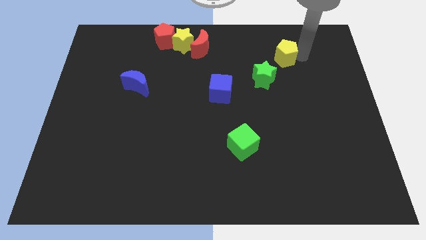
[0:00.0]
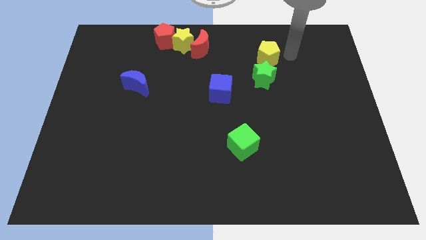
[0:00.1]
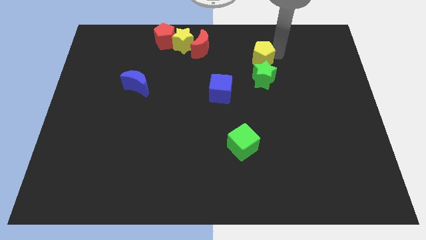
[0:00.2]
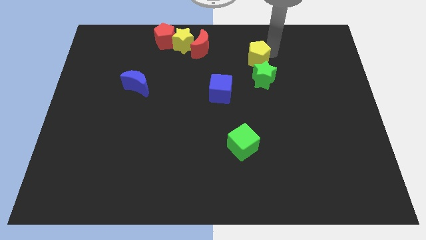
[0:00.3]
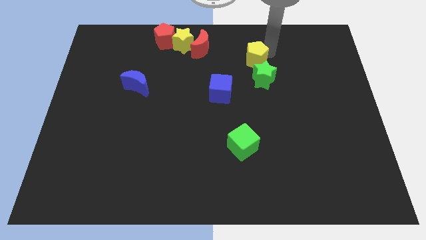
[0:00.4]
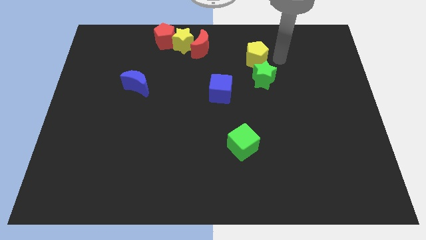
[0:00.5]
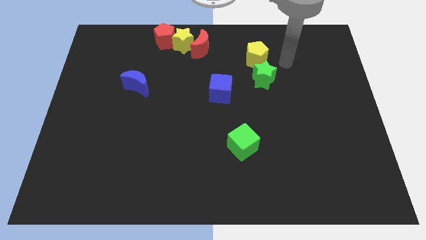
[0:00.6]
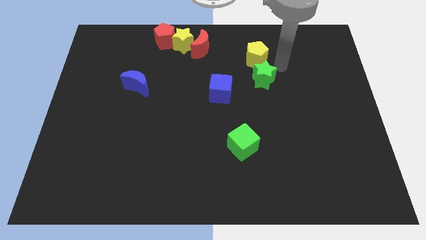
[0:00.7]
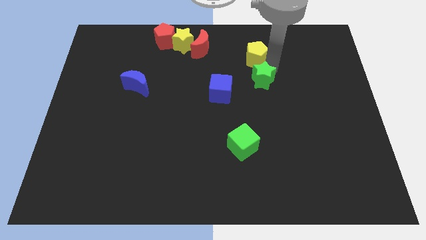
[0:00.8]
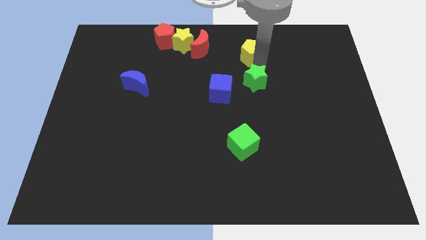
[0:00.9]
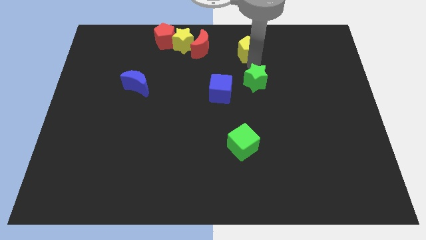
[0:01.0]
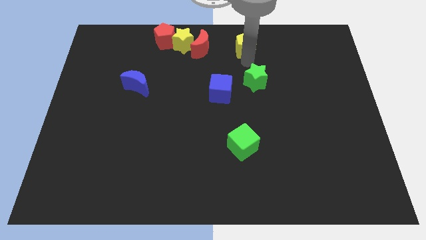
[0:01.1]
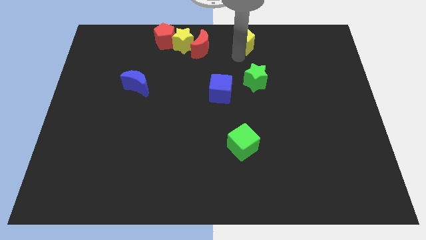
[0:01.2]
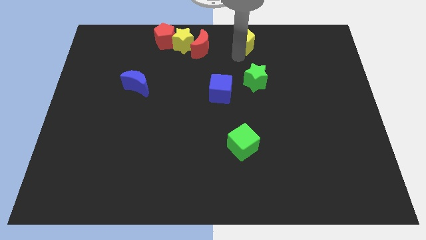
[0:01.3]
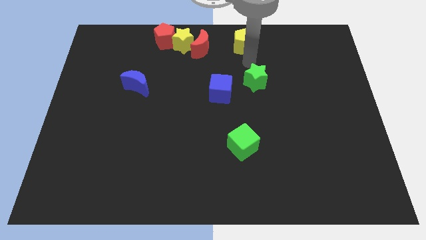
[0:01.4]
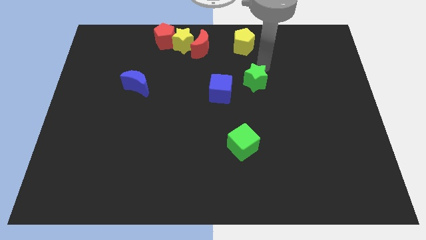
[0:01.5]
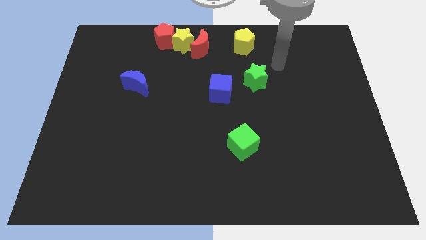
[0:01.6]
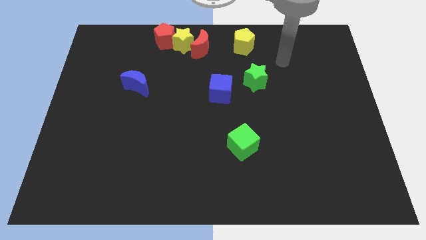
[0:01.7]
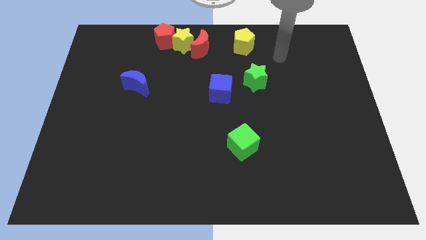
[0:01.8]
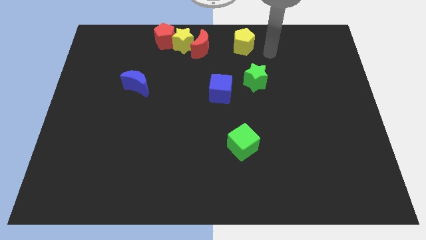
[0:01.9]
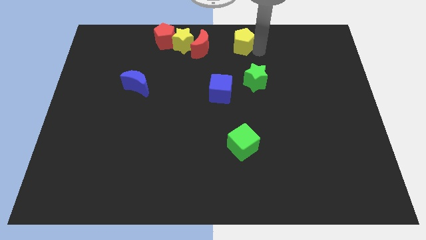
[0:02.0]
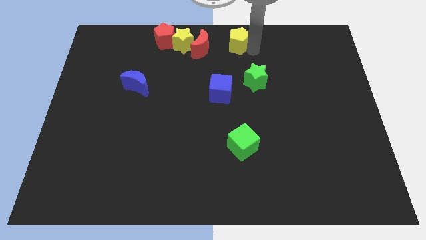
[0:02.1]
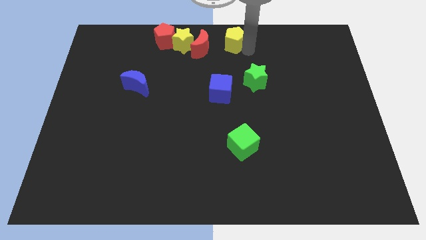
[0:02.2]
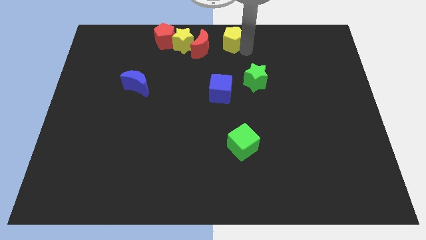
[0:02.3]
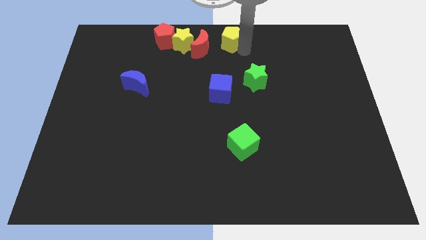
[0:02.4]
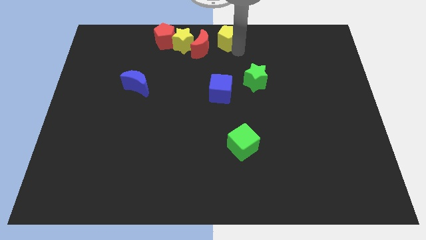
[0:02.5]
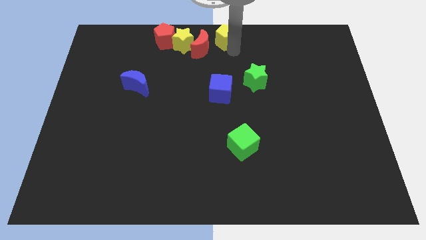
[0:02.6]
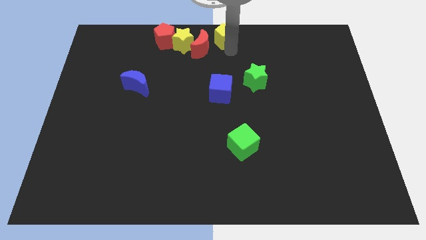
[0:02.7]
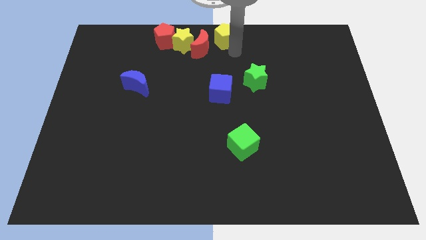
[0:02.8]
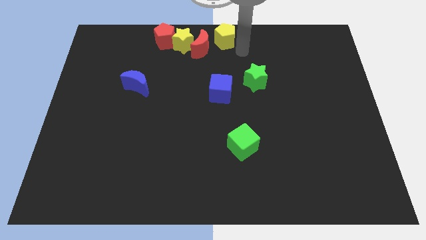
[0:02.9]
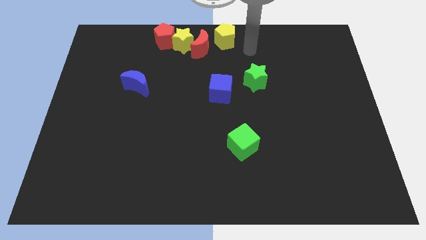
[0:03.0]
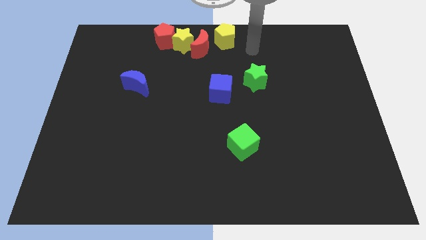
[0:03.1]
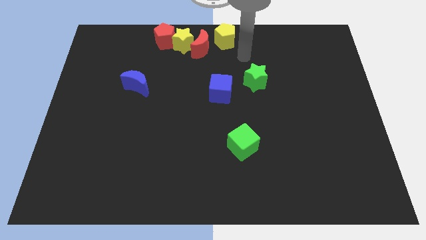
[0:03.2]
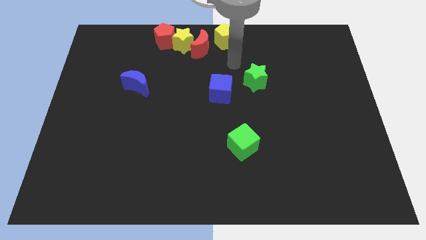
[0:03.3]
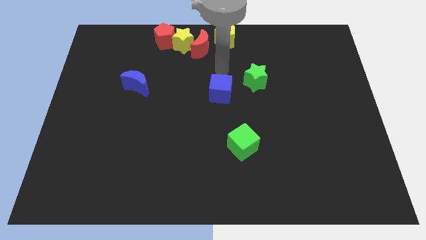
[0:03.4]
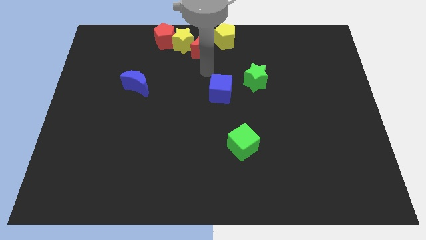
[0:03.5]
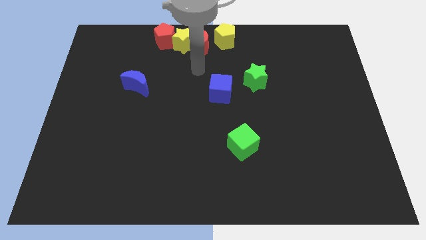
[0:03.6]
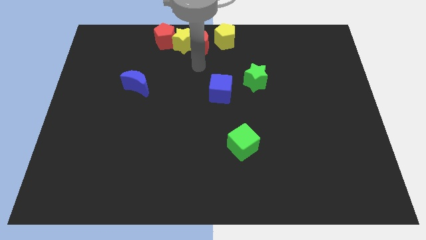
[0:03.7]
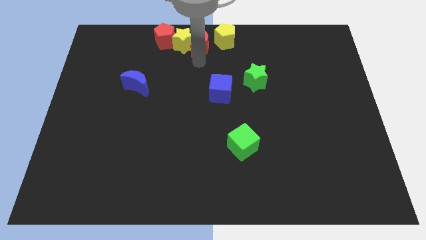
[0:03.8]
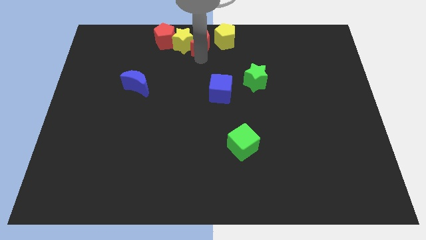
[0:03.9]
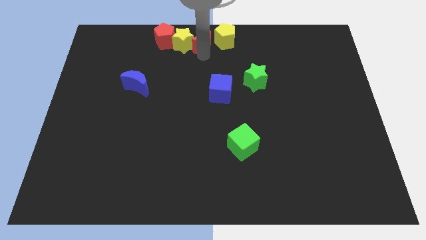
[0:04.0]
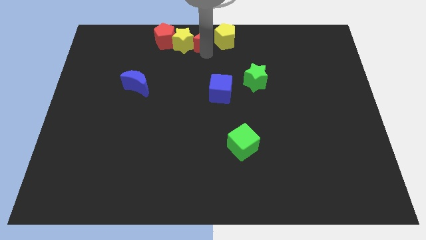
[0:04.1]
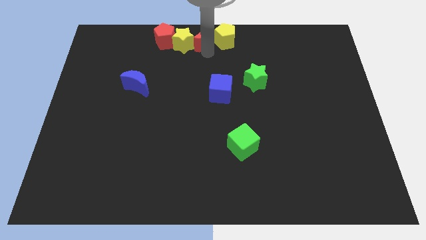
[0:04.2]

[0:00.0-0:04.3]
place the yellow pentagon at the top center

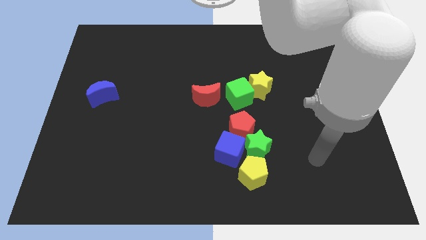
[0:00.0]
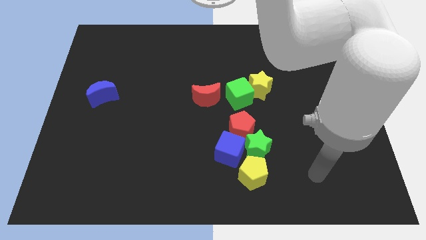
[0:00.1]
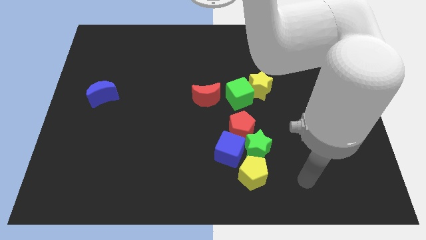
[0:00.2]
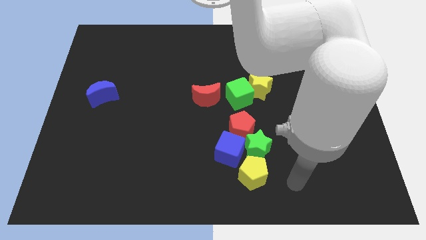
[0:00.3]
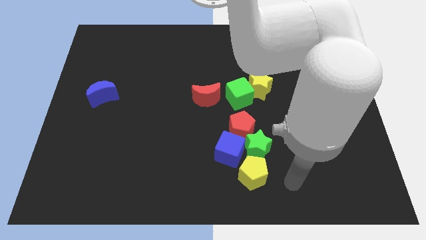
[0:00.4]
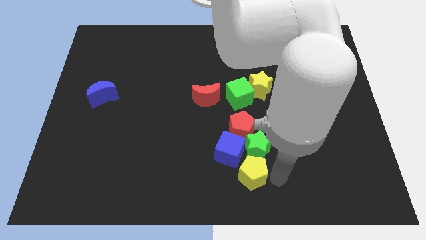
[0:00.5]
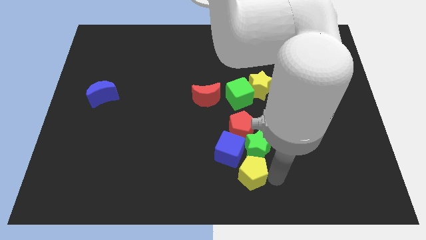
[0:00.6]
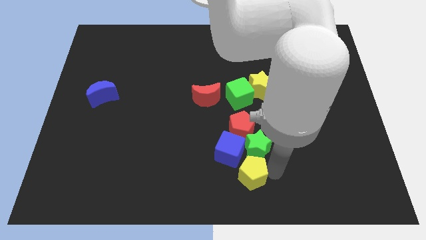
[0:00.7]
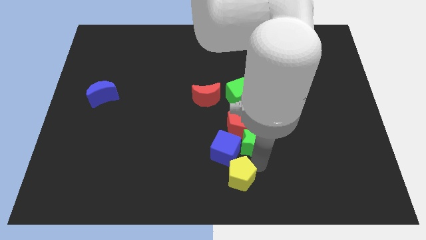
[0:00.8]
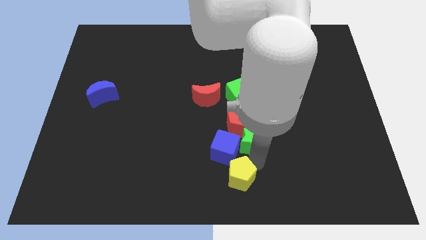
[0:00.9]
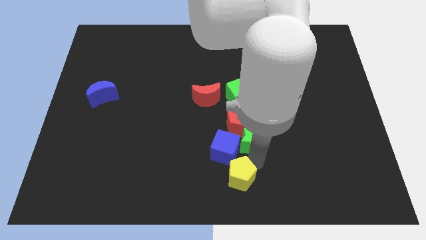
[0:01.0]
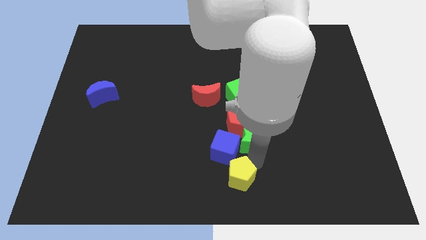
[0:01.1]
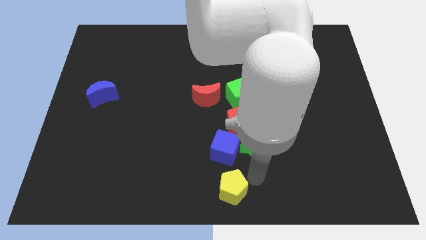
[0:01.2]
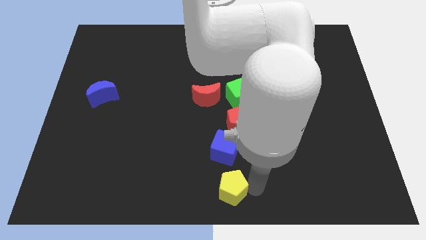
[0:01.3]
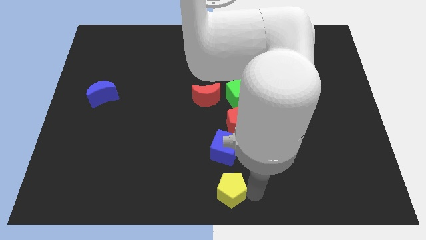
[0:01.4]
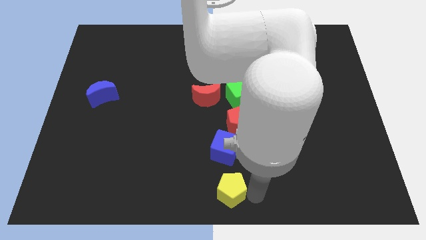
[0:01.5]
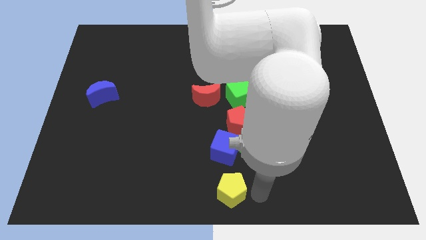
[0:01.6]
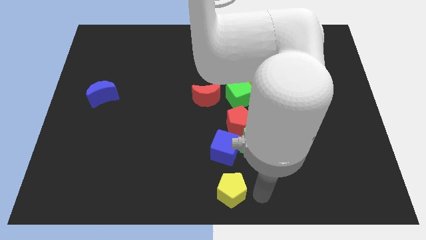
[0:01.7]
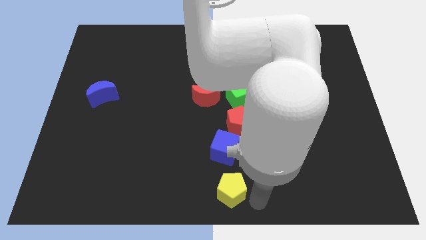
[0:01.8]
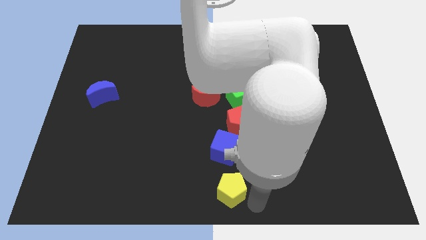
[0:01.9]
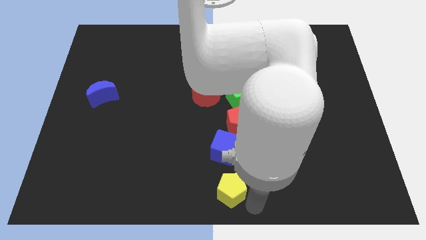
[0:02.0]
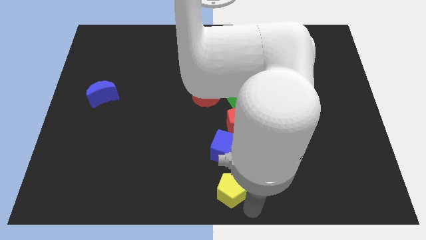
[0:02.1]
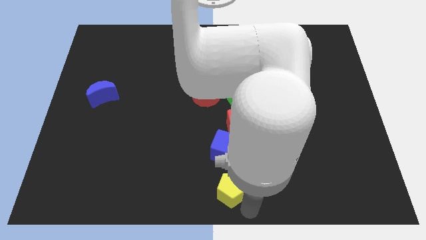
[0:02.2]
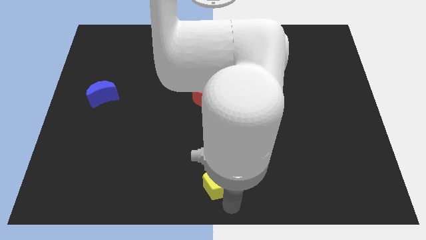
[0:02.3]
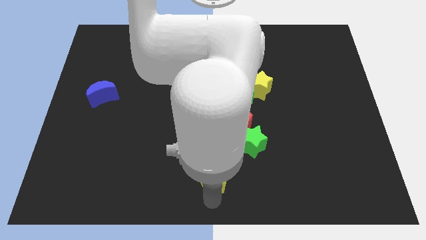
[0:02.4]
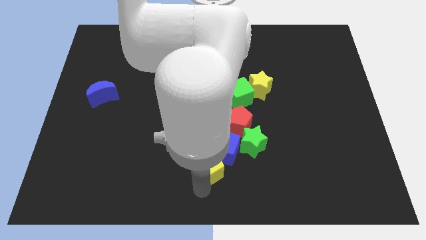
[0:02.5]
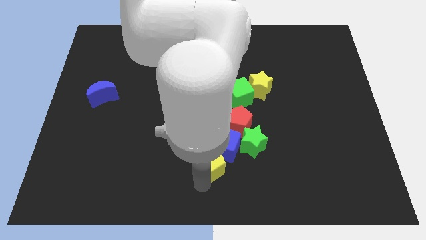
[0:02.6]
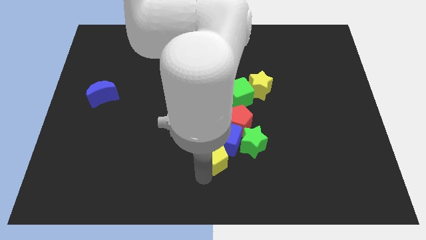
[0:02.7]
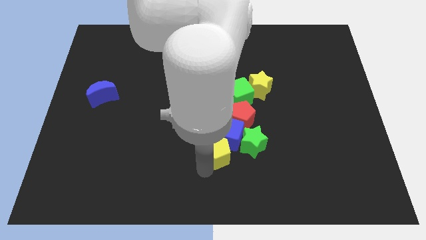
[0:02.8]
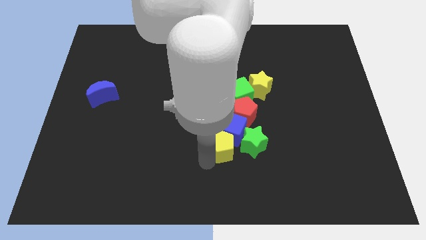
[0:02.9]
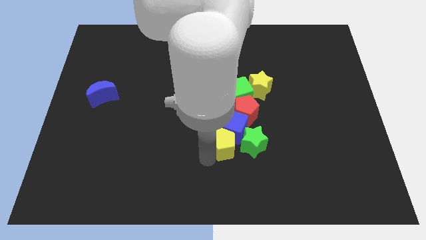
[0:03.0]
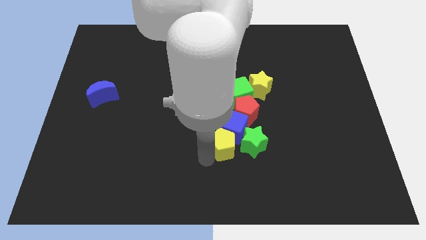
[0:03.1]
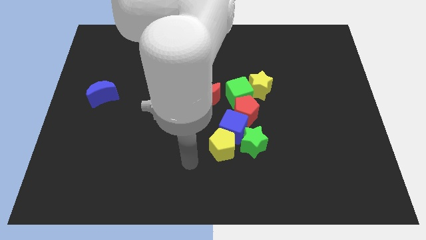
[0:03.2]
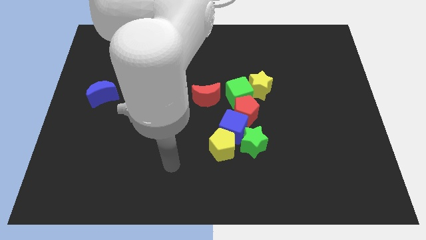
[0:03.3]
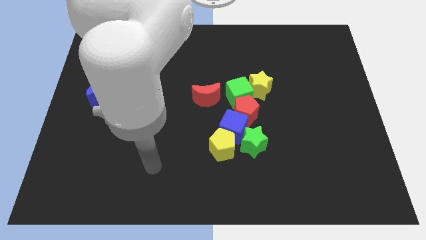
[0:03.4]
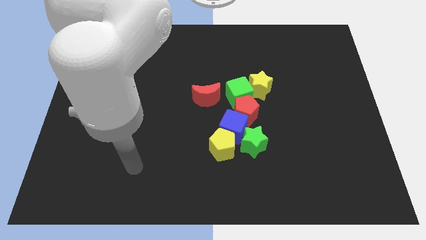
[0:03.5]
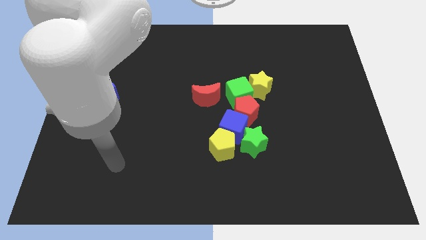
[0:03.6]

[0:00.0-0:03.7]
push the green star and the yellow pentagon into the blue cube

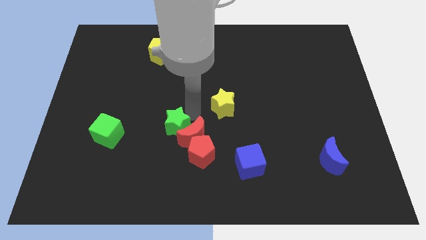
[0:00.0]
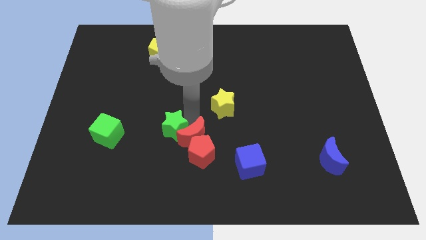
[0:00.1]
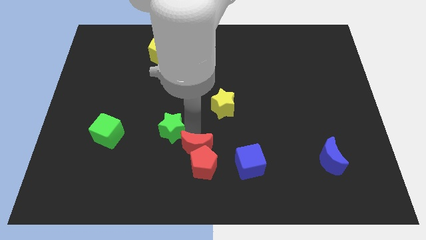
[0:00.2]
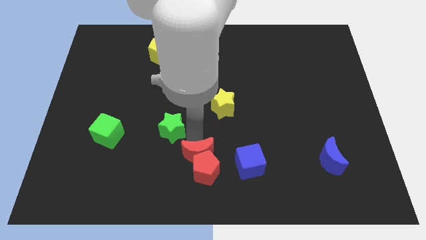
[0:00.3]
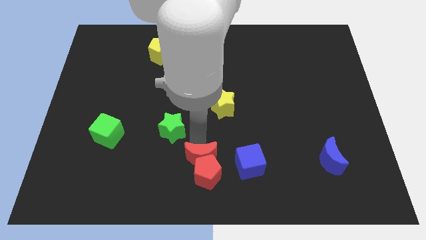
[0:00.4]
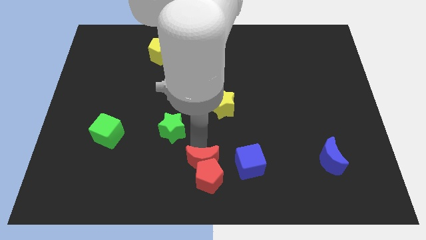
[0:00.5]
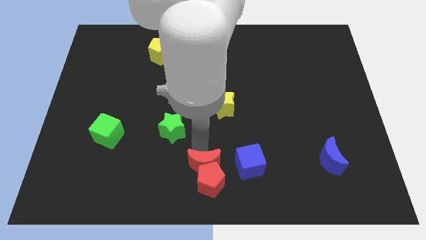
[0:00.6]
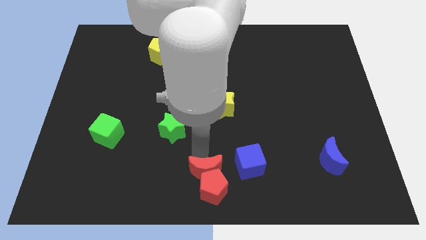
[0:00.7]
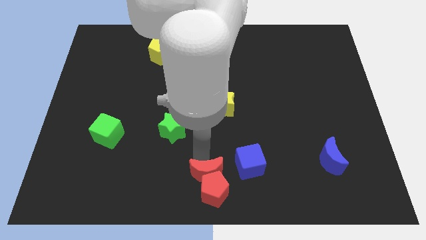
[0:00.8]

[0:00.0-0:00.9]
push the red moon and red pentagon downward

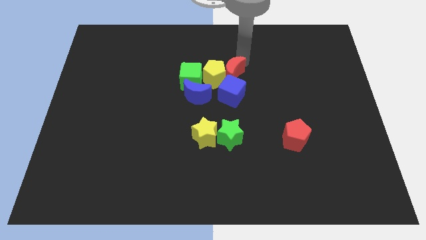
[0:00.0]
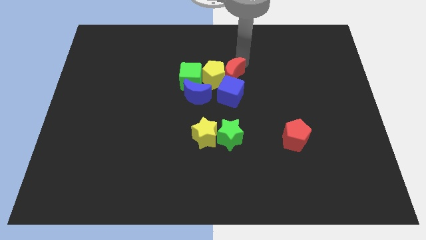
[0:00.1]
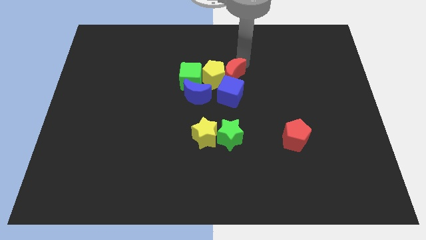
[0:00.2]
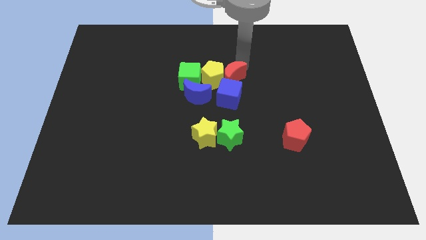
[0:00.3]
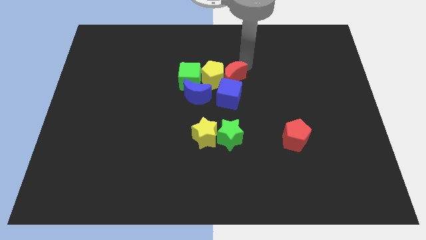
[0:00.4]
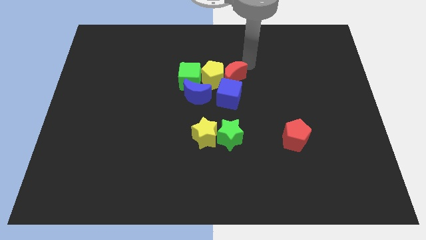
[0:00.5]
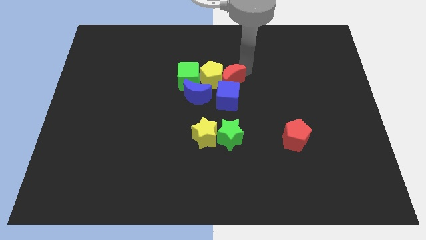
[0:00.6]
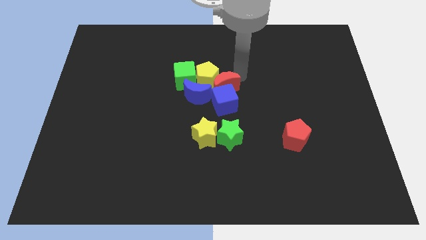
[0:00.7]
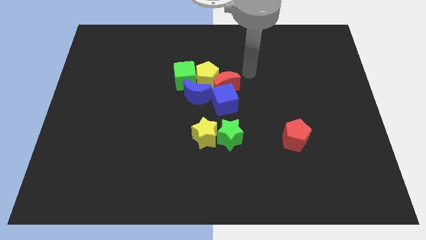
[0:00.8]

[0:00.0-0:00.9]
move the red crescent in to the group of objects
